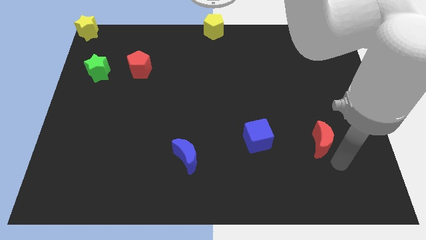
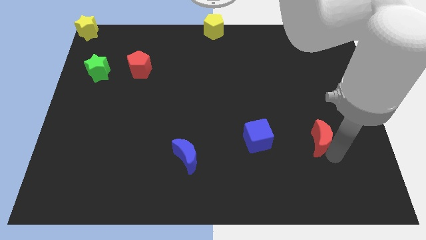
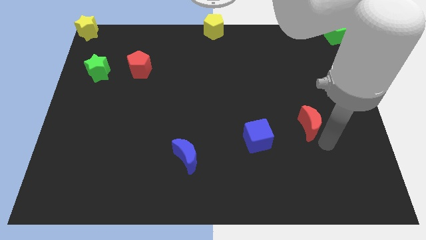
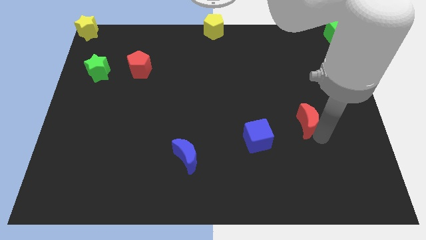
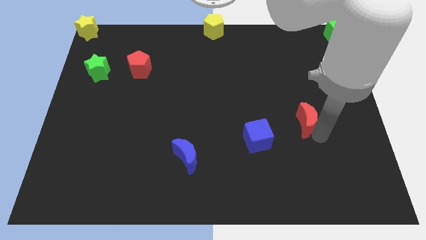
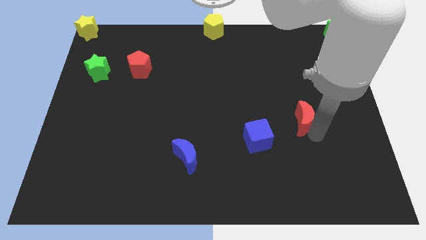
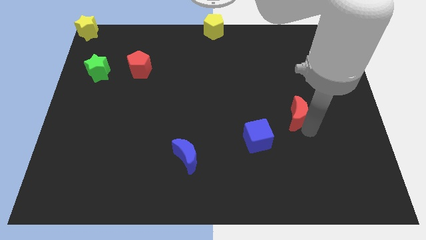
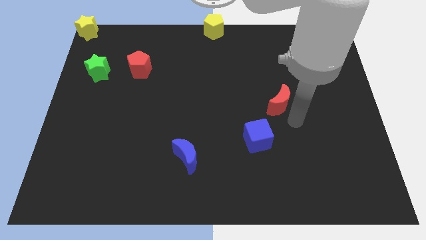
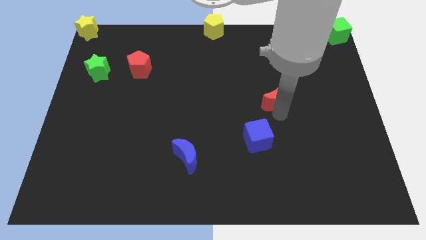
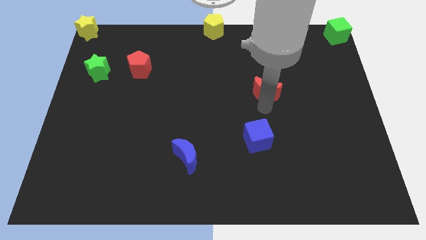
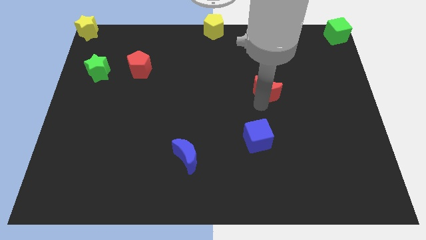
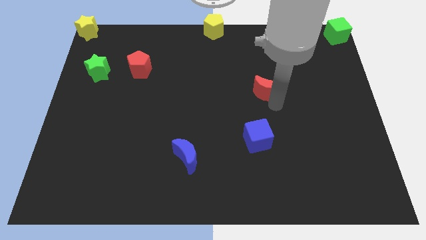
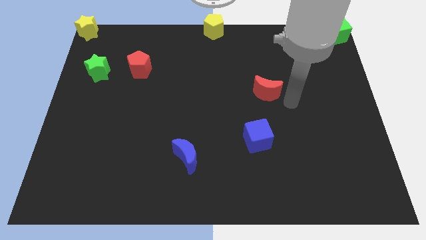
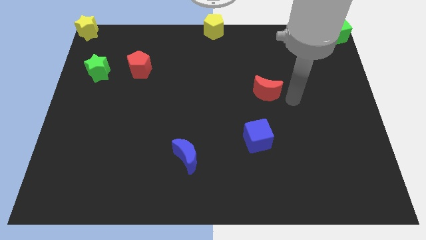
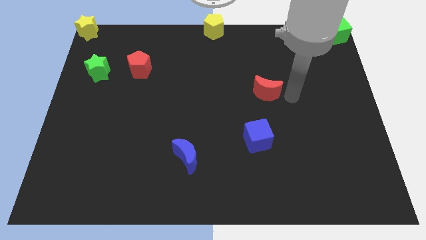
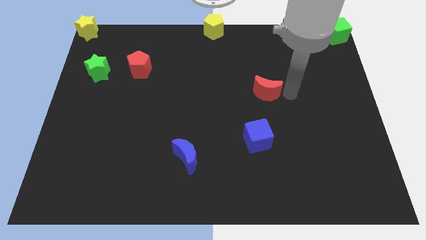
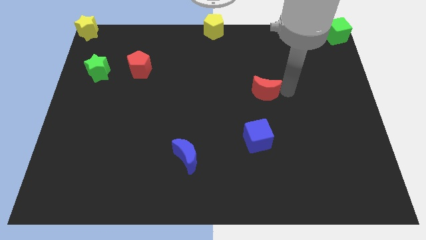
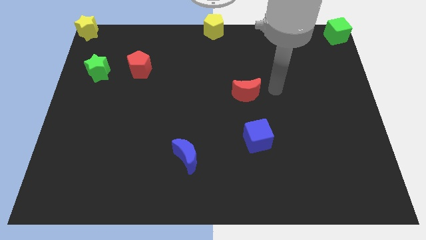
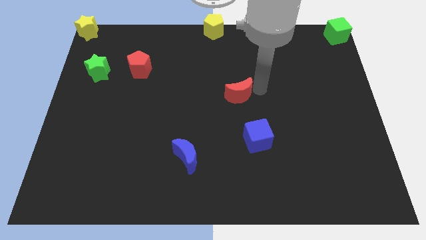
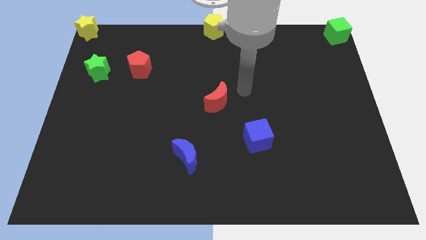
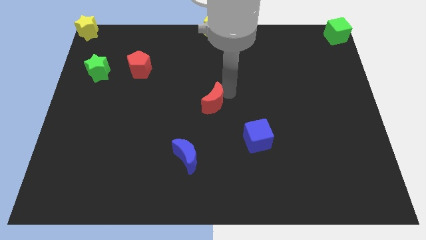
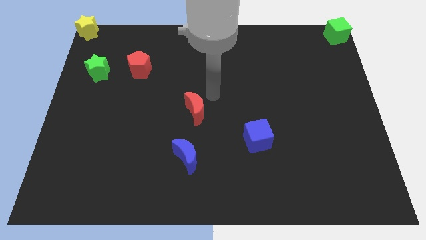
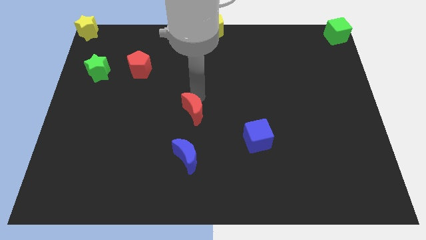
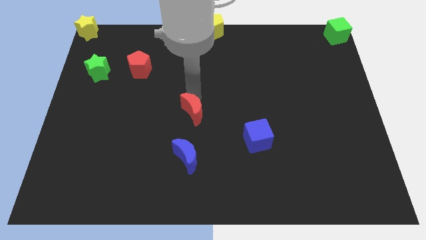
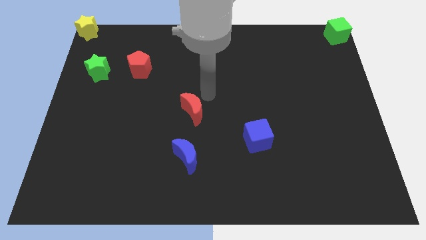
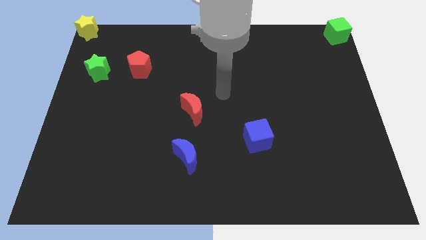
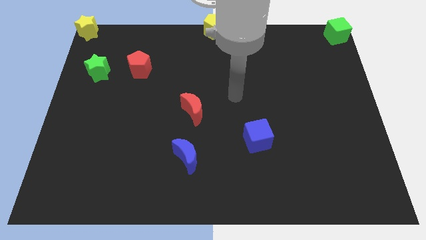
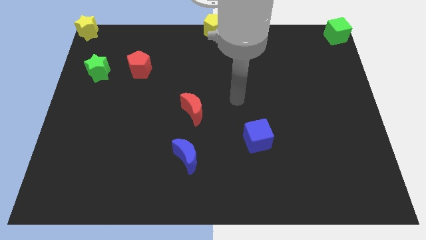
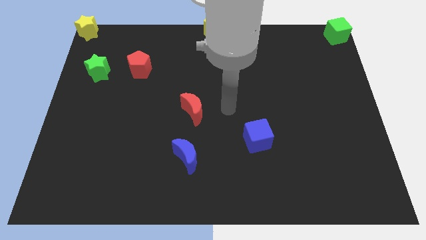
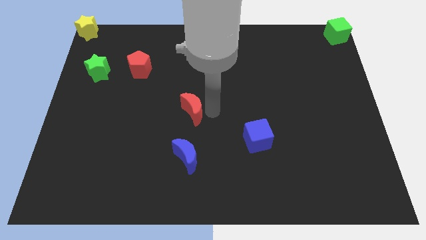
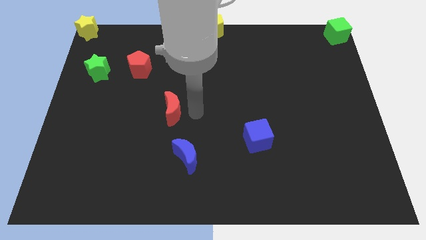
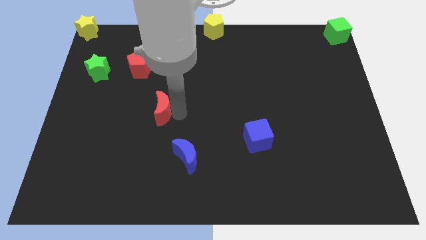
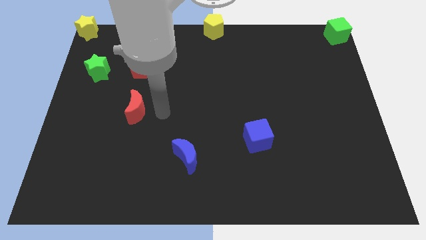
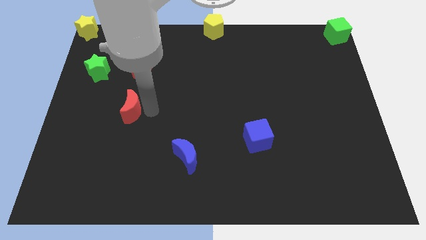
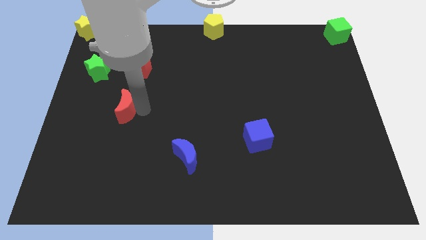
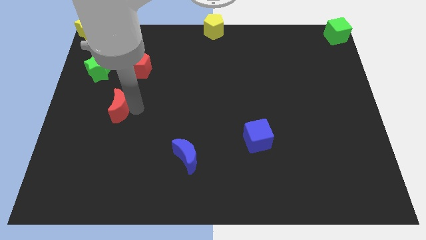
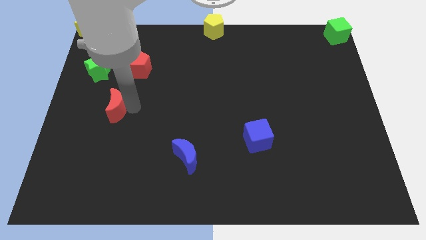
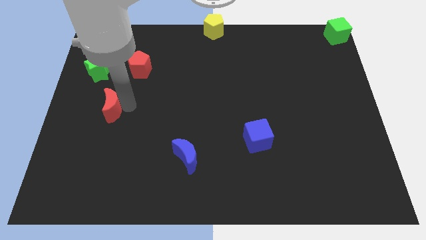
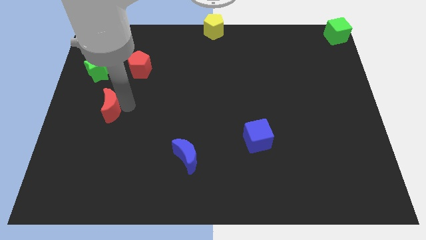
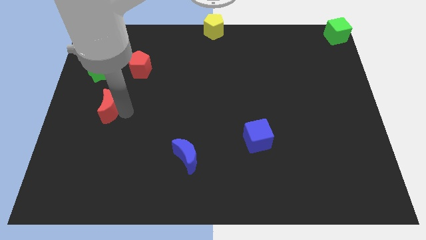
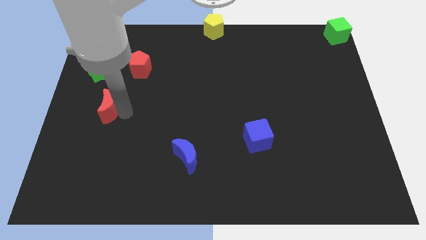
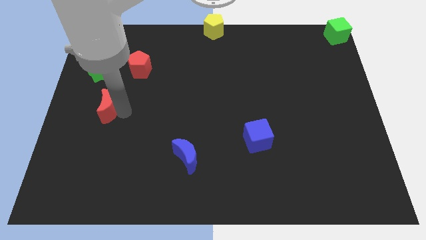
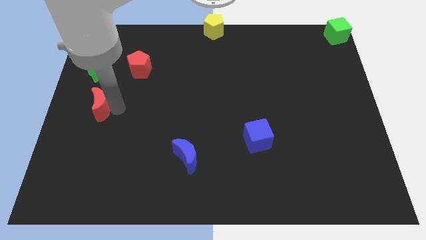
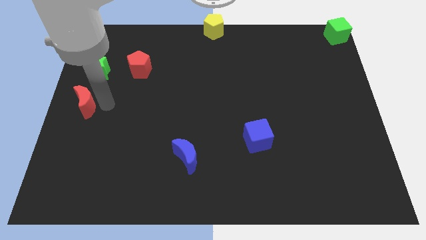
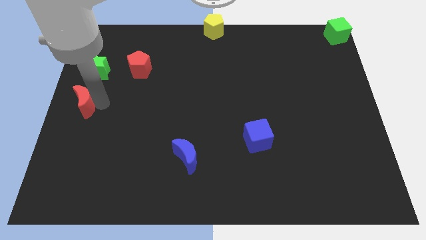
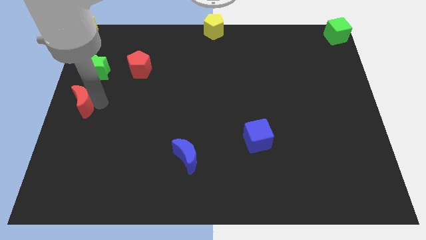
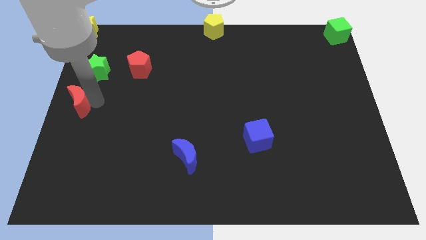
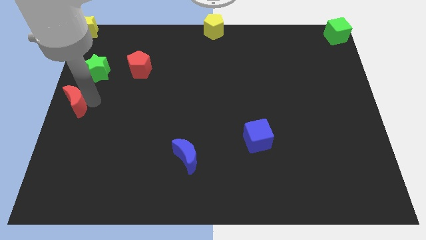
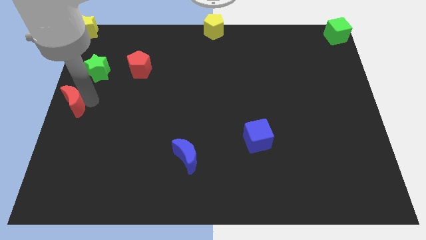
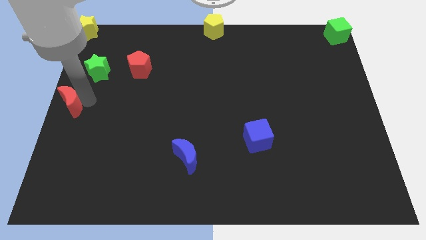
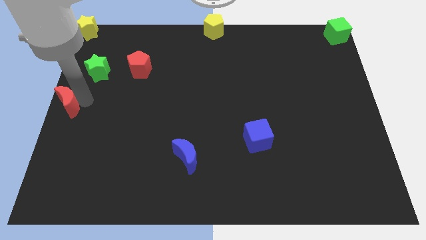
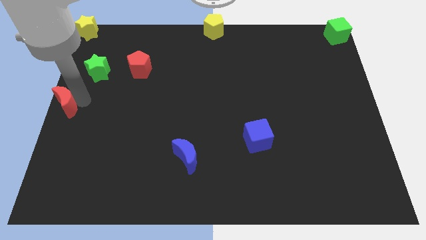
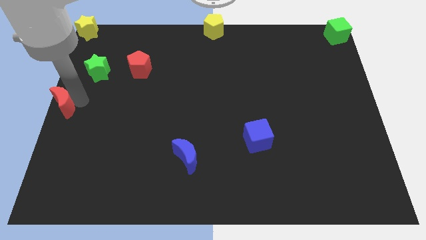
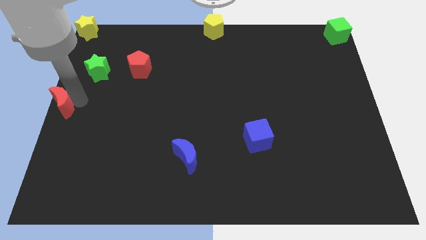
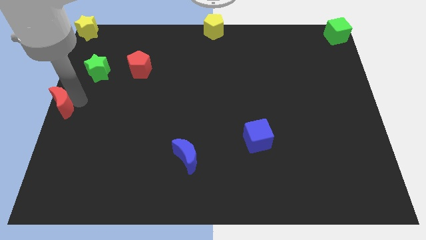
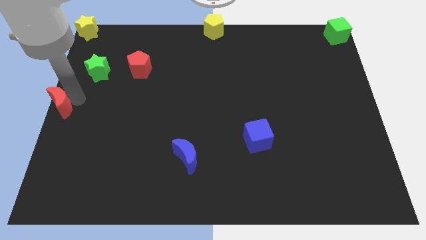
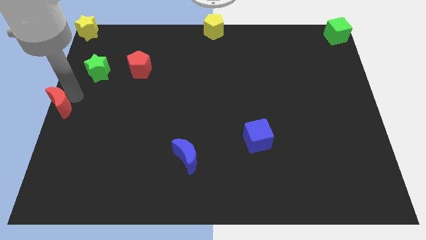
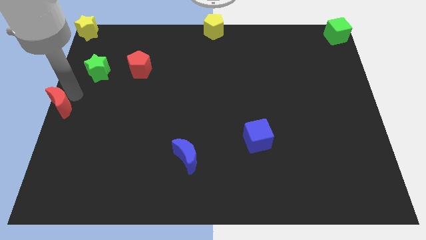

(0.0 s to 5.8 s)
move the red crescent towards the left center of the board

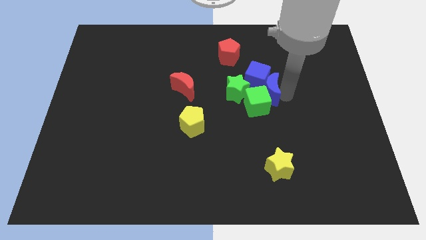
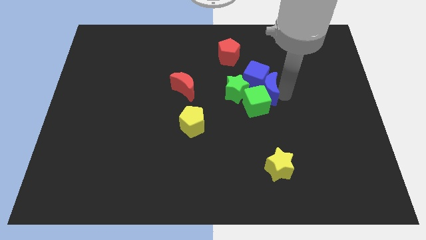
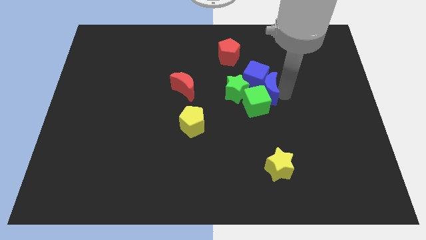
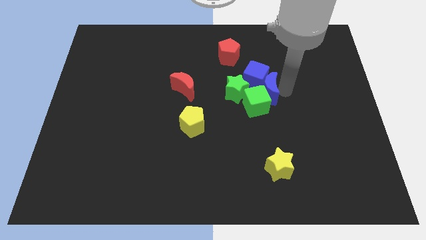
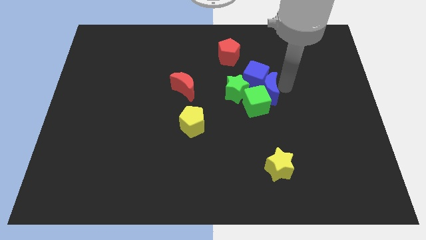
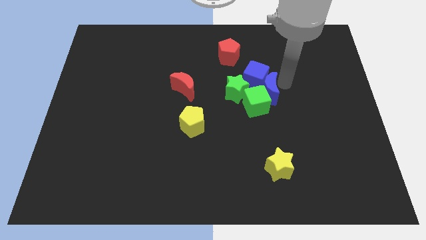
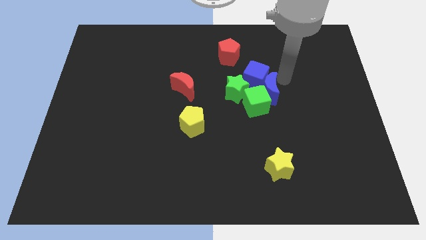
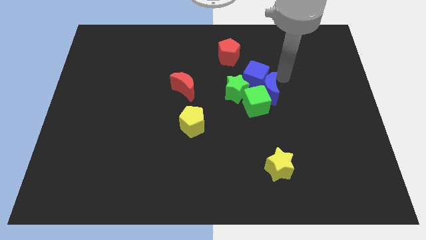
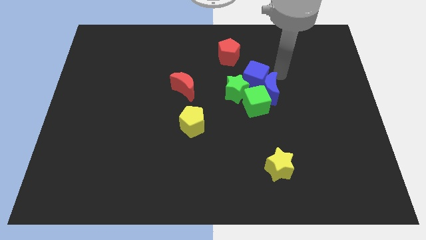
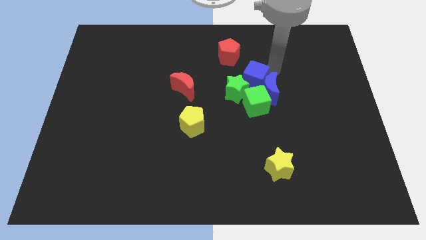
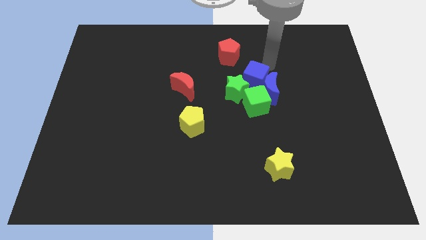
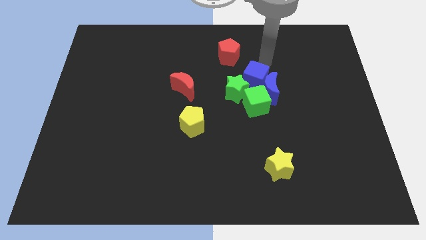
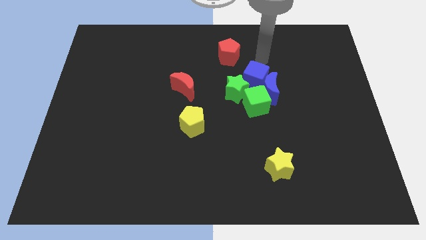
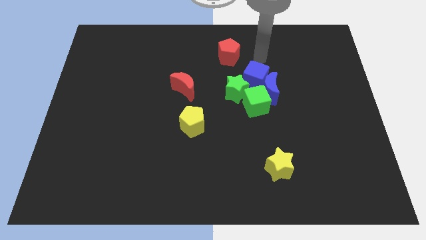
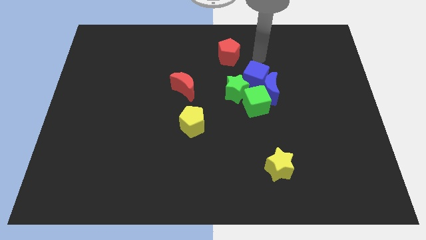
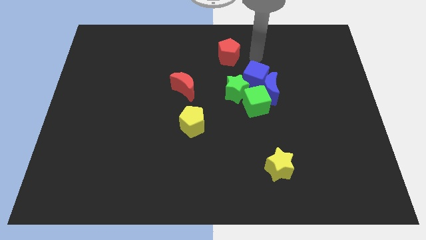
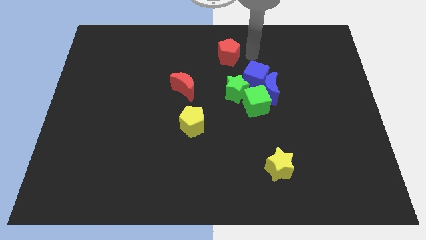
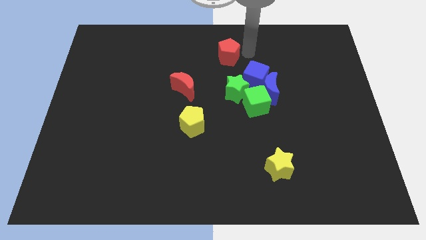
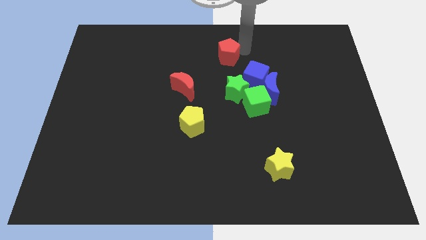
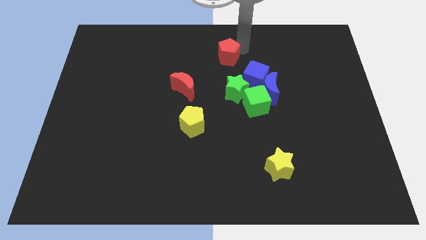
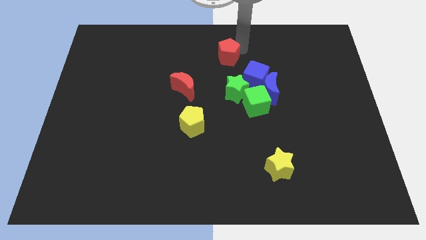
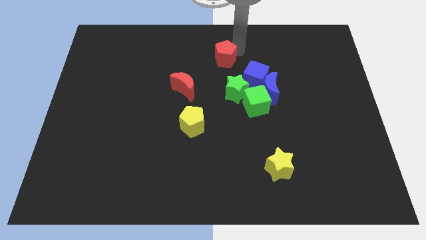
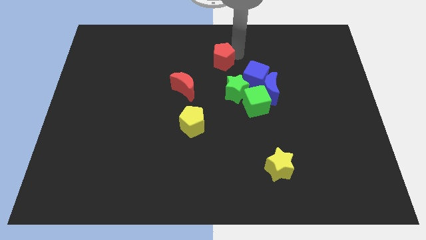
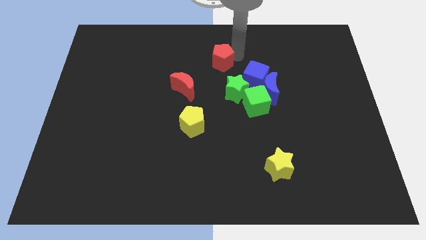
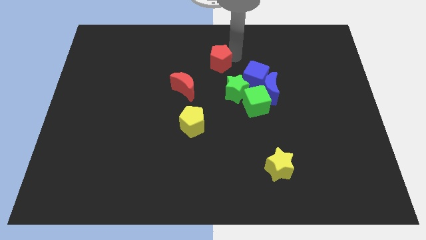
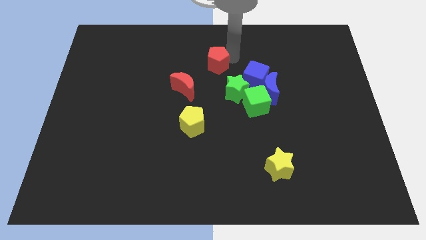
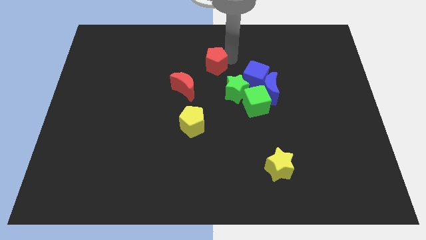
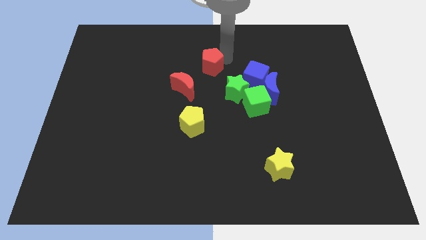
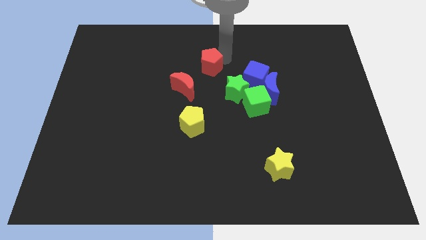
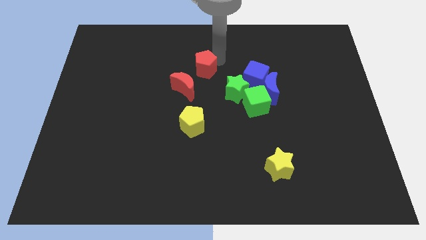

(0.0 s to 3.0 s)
move the red pentagon towards red crescent
